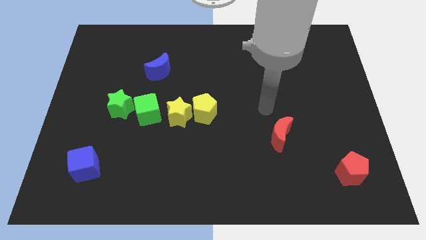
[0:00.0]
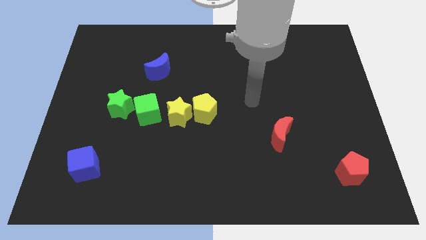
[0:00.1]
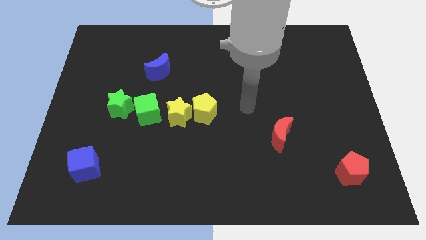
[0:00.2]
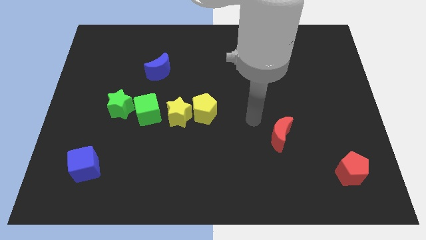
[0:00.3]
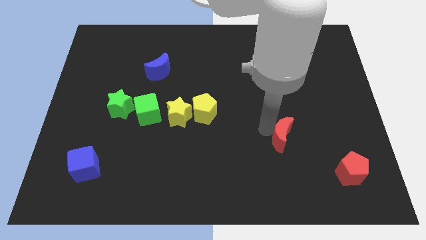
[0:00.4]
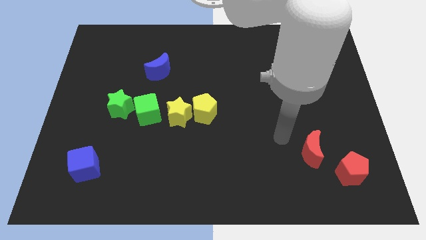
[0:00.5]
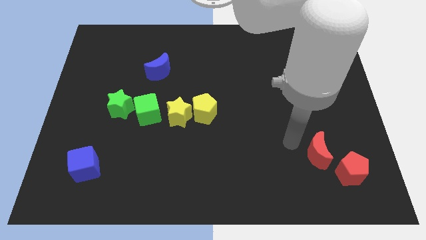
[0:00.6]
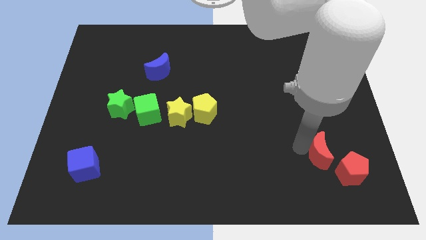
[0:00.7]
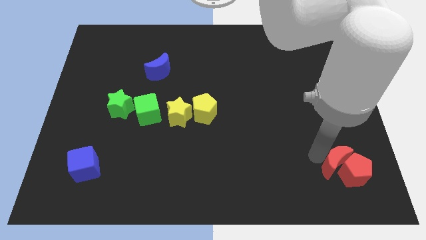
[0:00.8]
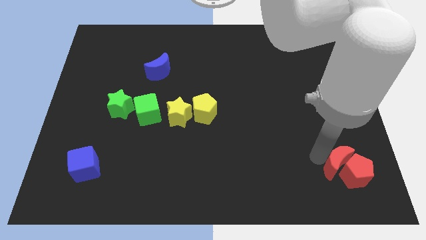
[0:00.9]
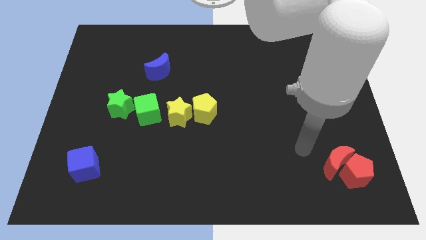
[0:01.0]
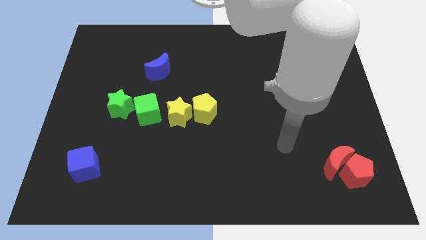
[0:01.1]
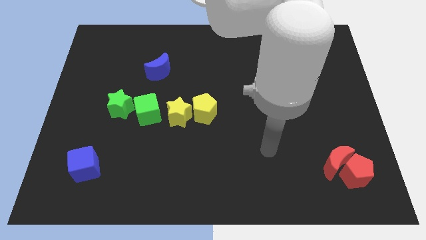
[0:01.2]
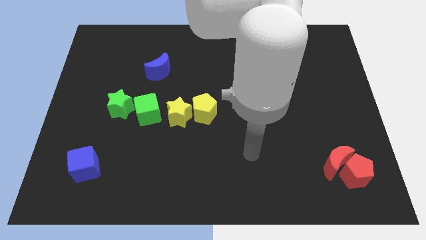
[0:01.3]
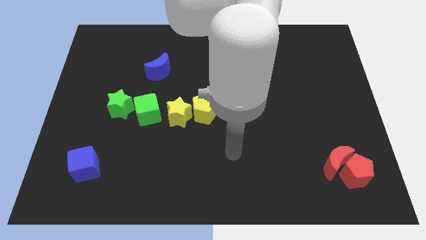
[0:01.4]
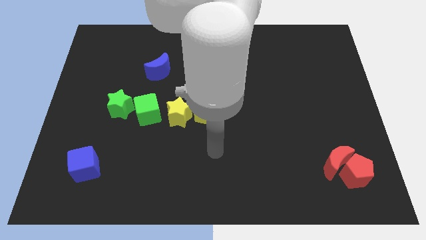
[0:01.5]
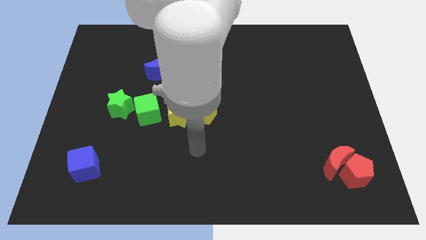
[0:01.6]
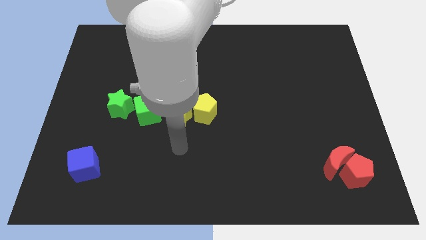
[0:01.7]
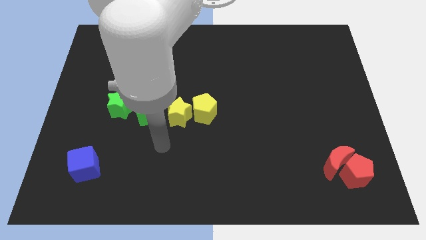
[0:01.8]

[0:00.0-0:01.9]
push the red crescent to the top left of red pentagon

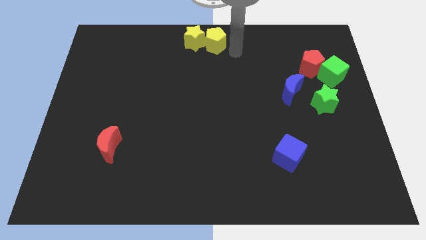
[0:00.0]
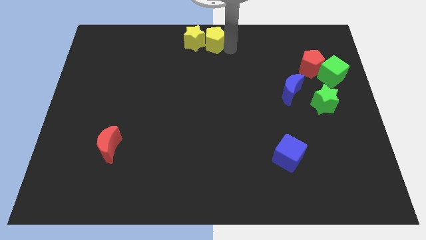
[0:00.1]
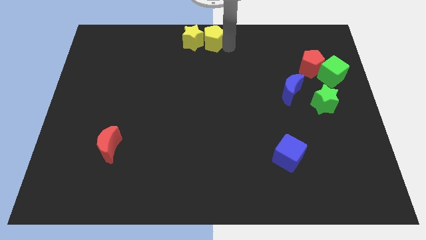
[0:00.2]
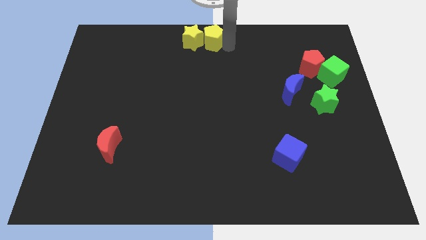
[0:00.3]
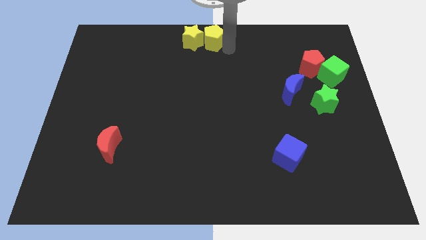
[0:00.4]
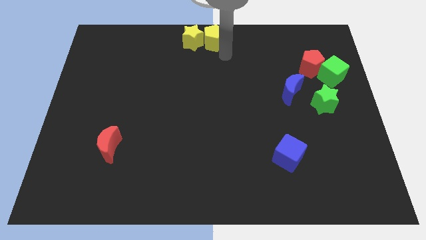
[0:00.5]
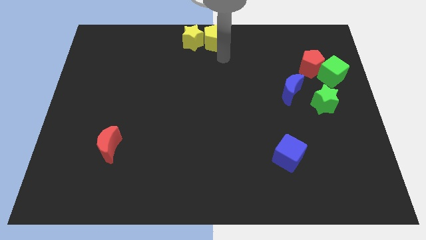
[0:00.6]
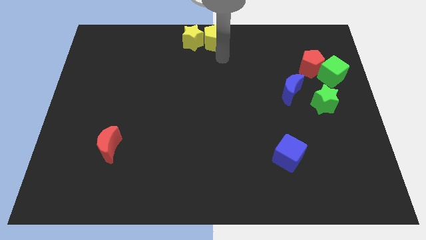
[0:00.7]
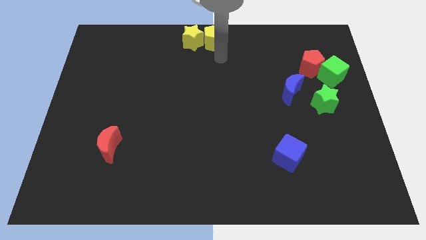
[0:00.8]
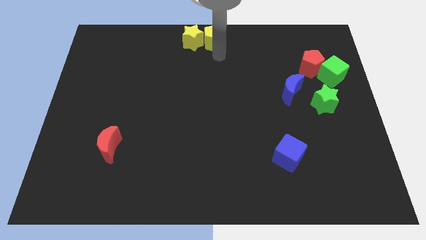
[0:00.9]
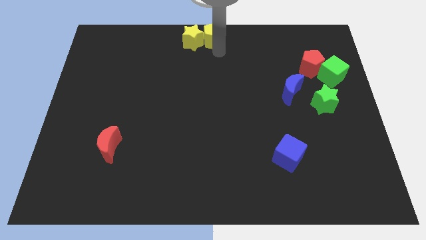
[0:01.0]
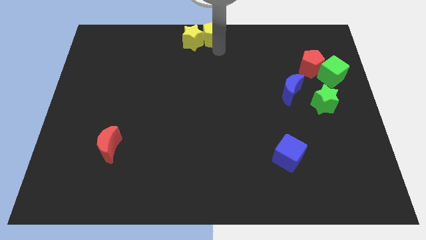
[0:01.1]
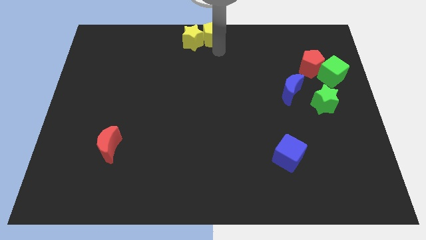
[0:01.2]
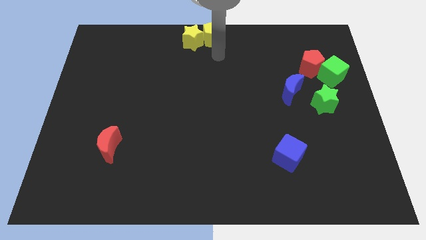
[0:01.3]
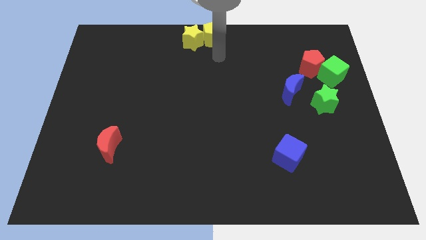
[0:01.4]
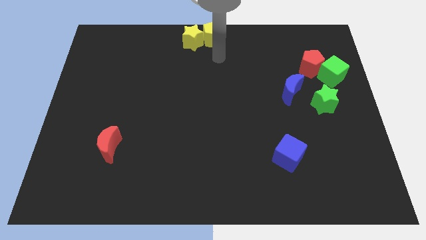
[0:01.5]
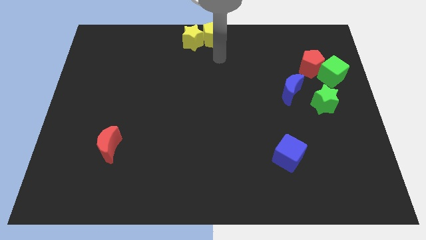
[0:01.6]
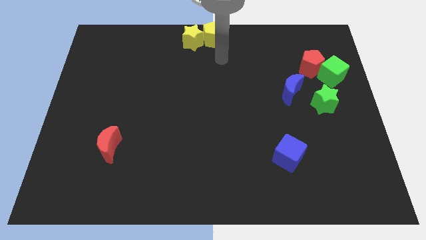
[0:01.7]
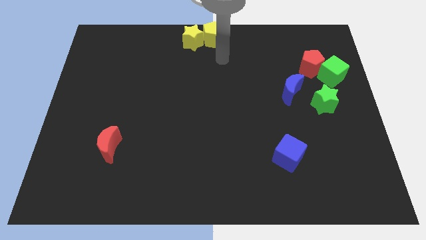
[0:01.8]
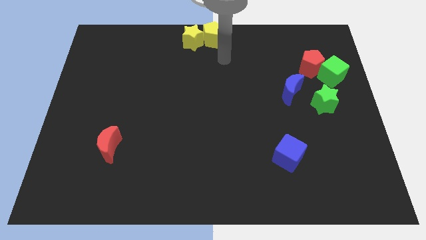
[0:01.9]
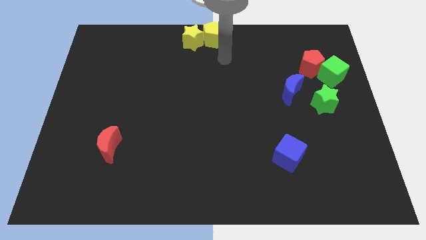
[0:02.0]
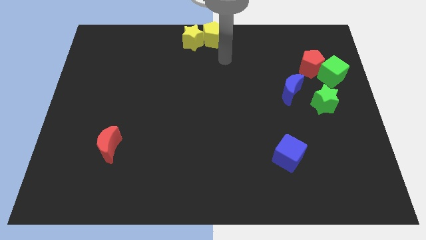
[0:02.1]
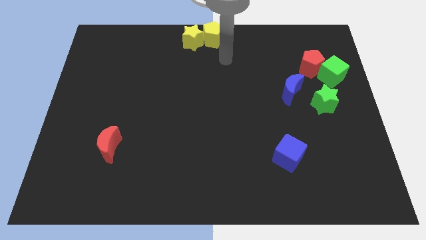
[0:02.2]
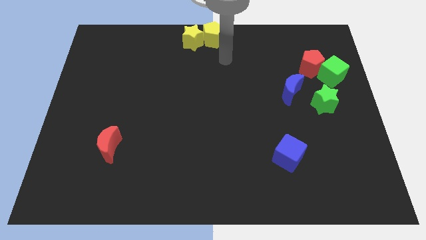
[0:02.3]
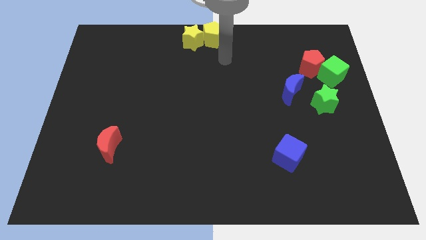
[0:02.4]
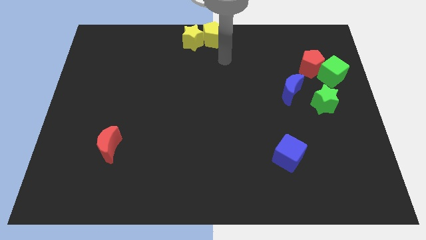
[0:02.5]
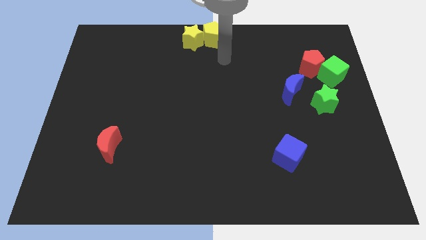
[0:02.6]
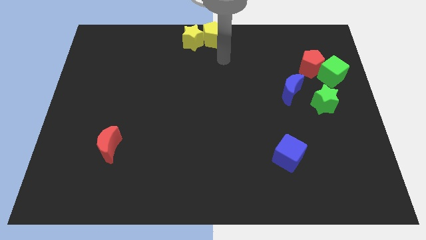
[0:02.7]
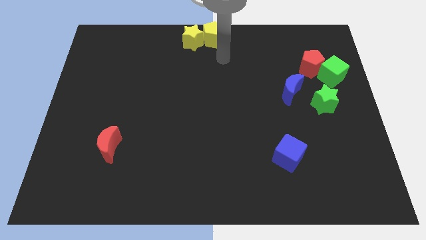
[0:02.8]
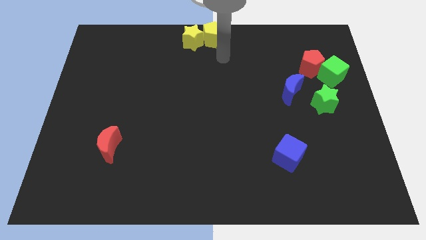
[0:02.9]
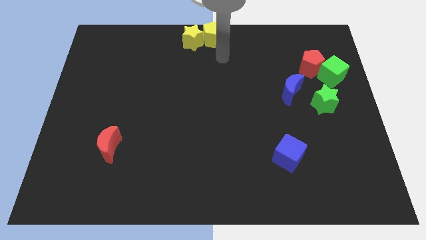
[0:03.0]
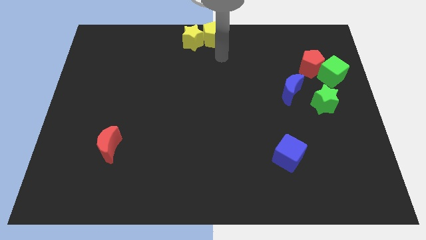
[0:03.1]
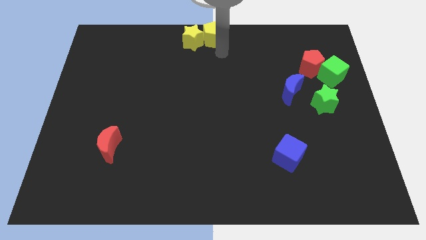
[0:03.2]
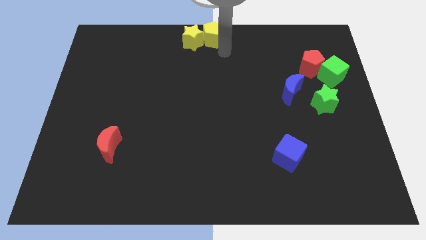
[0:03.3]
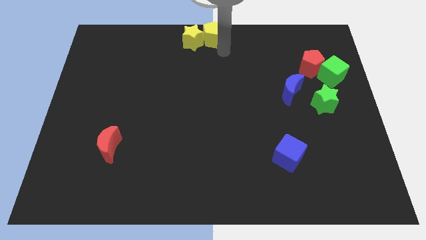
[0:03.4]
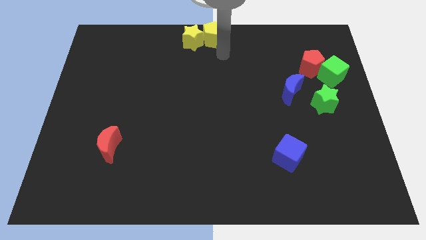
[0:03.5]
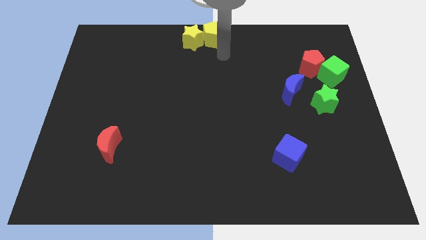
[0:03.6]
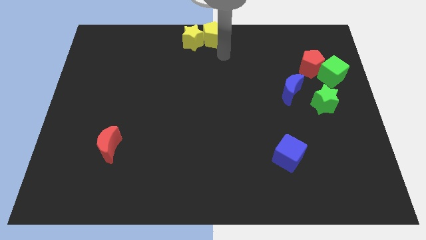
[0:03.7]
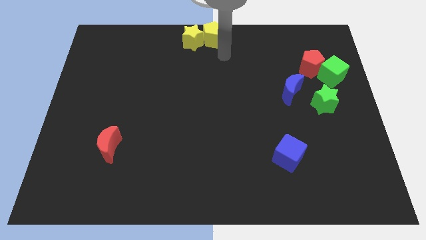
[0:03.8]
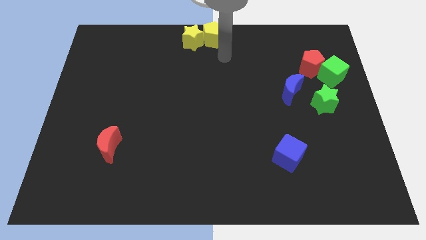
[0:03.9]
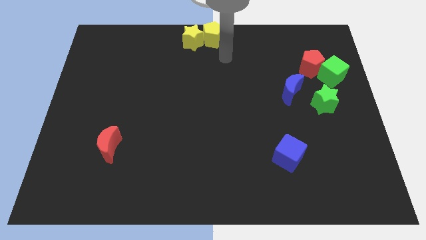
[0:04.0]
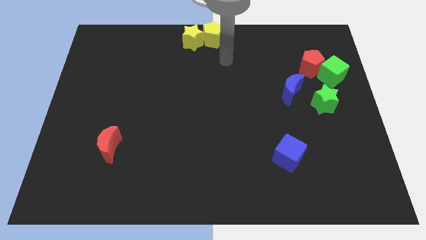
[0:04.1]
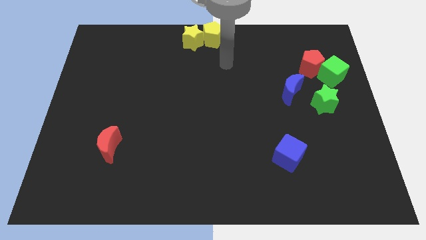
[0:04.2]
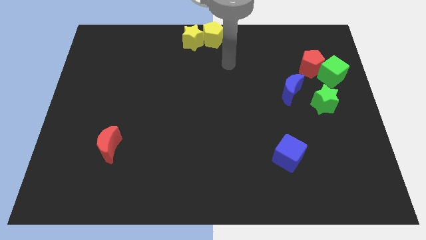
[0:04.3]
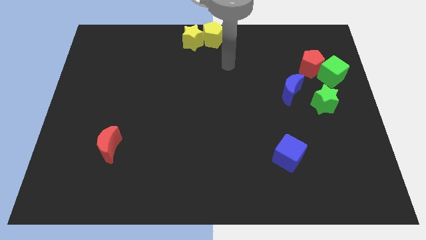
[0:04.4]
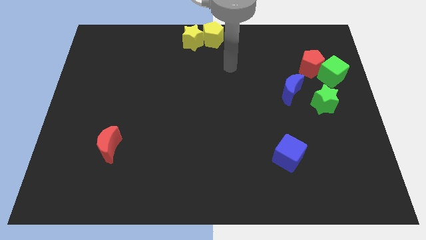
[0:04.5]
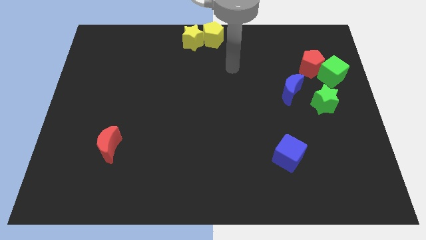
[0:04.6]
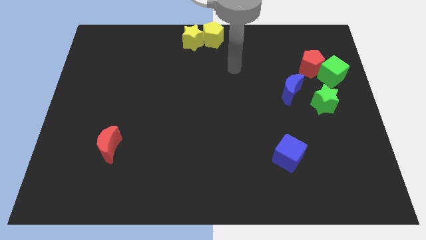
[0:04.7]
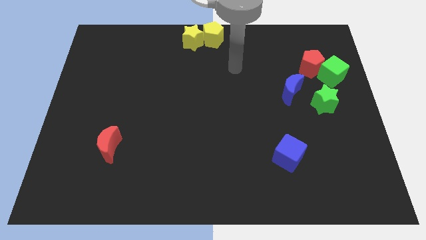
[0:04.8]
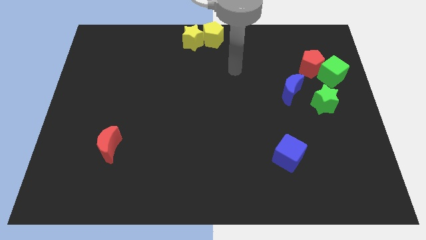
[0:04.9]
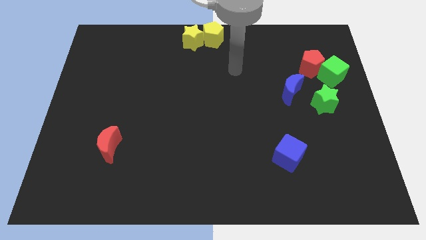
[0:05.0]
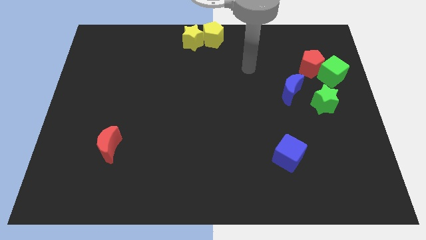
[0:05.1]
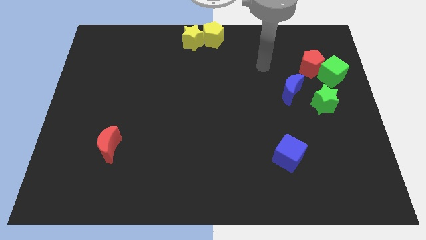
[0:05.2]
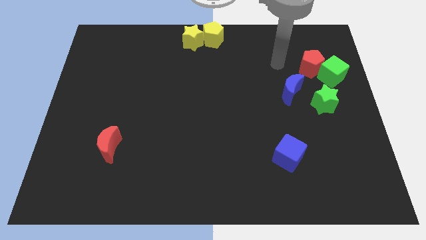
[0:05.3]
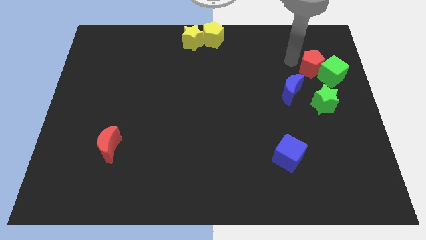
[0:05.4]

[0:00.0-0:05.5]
move your arm away from the yellow pentagon

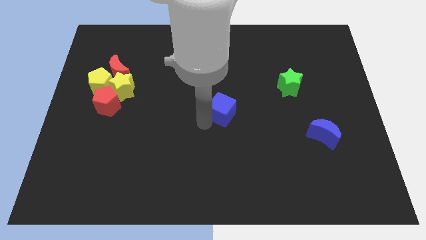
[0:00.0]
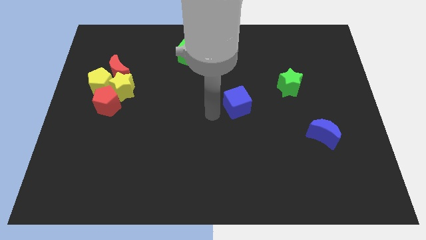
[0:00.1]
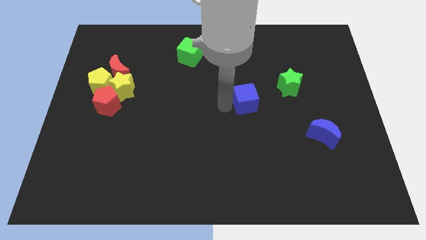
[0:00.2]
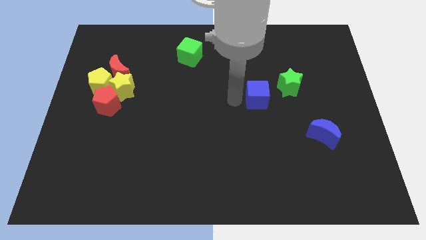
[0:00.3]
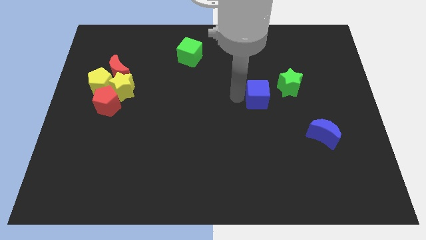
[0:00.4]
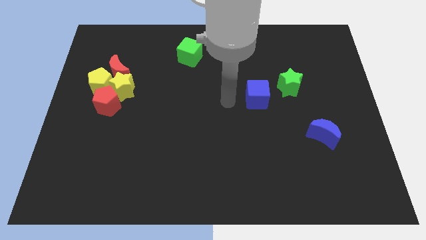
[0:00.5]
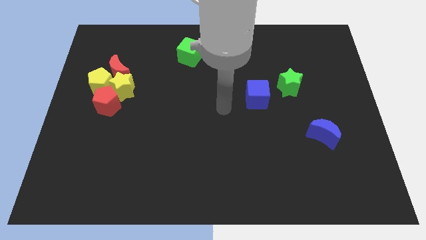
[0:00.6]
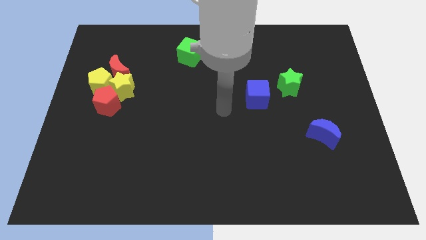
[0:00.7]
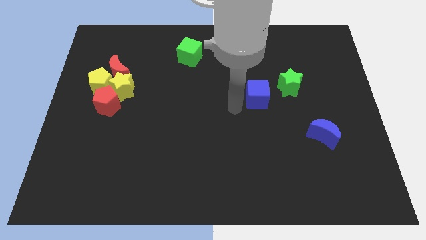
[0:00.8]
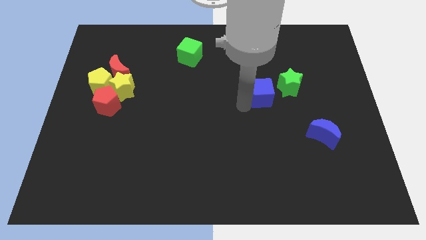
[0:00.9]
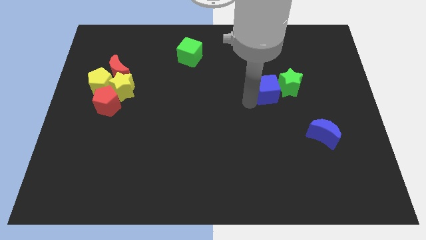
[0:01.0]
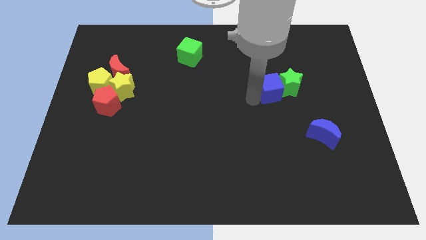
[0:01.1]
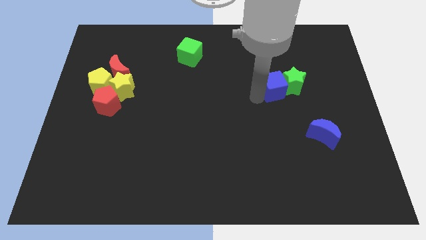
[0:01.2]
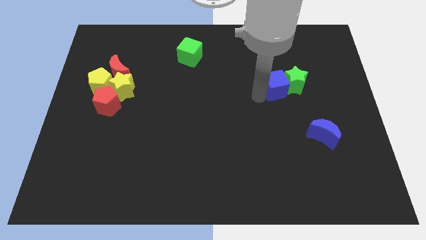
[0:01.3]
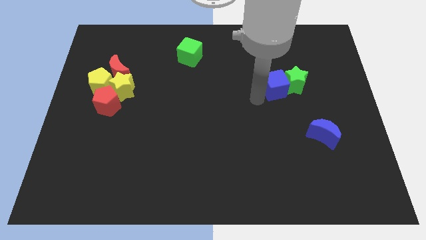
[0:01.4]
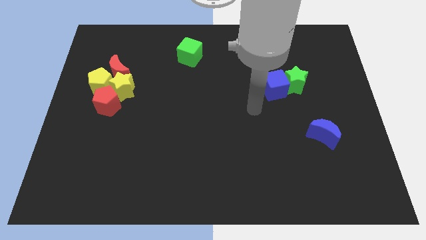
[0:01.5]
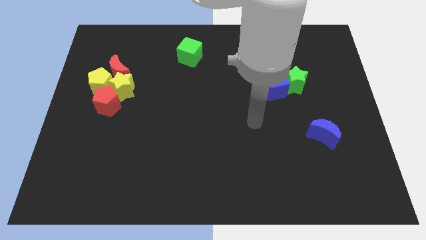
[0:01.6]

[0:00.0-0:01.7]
push the blue cube into the green star
